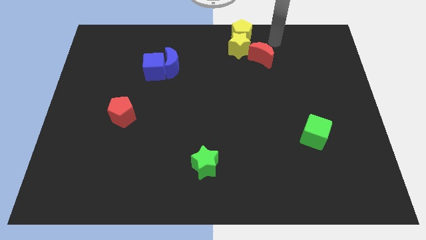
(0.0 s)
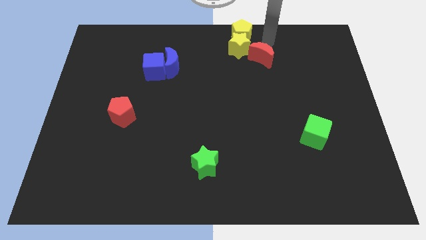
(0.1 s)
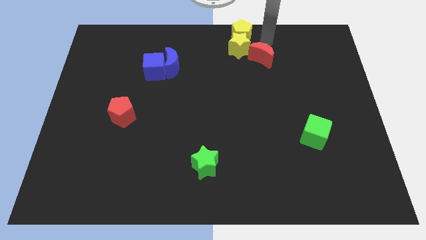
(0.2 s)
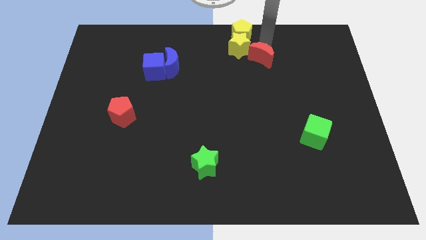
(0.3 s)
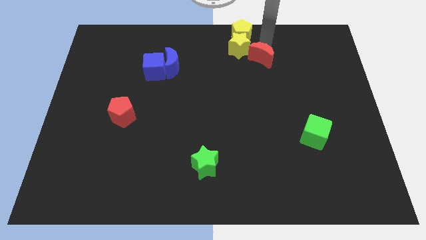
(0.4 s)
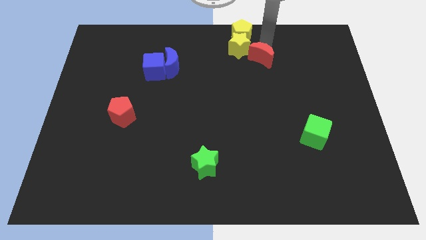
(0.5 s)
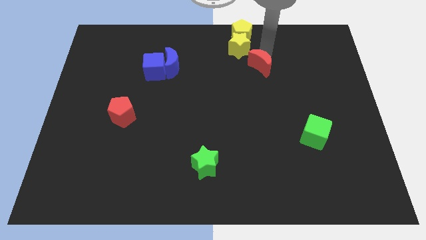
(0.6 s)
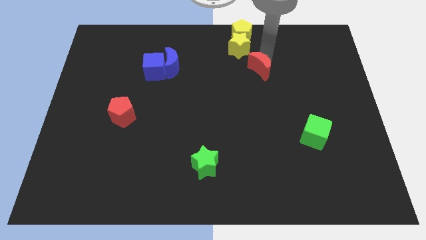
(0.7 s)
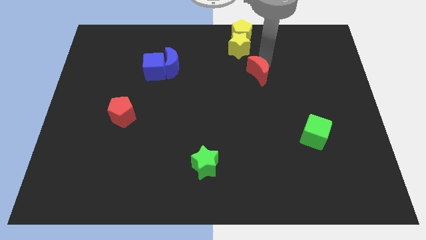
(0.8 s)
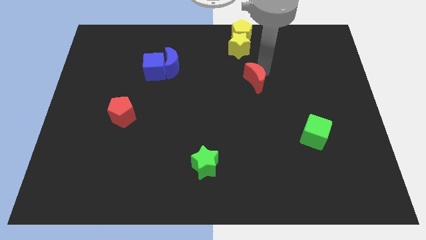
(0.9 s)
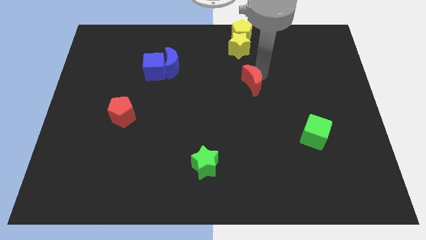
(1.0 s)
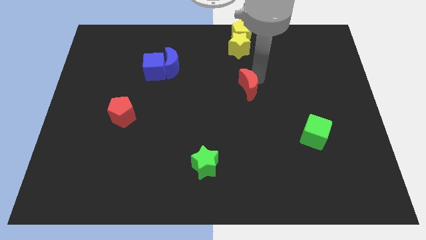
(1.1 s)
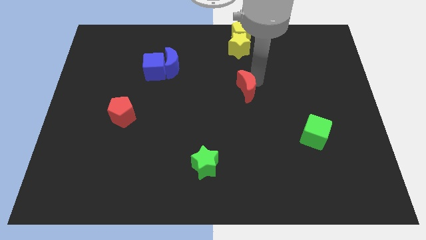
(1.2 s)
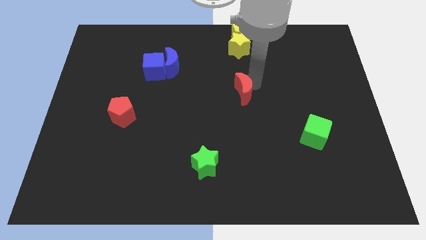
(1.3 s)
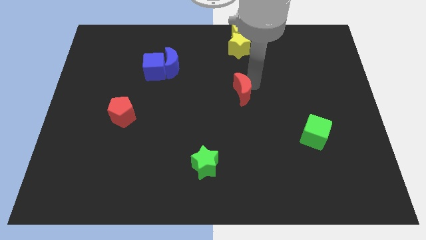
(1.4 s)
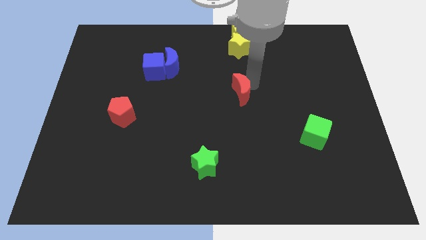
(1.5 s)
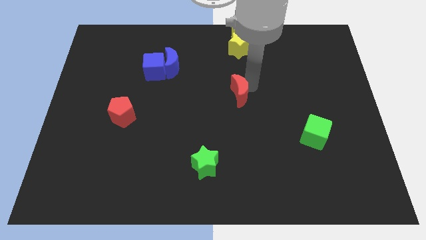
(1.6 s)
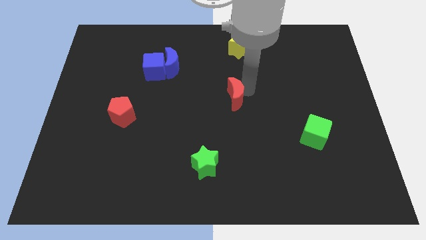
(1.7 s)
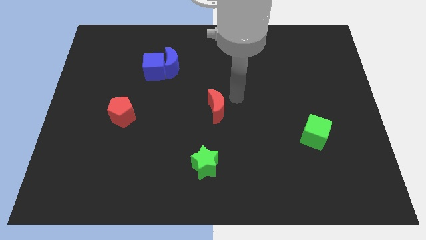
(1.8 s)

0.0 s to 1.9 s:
separate the red moon from the yellow star

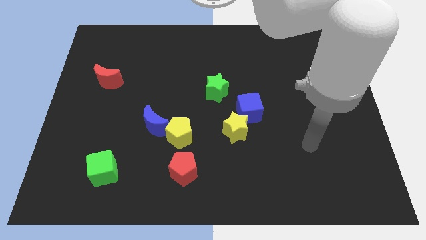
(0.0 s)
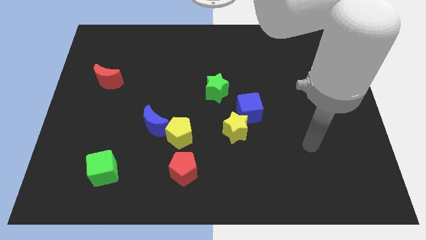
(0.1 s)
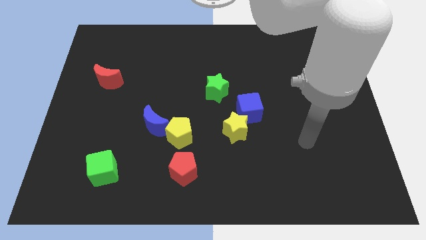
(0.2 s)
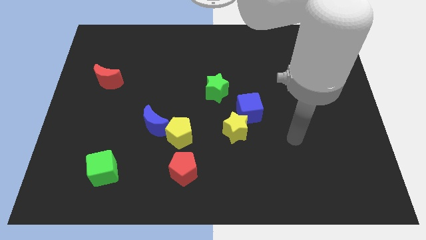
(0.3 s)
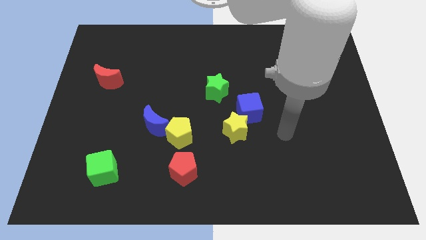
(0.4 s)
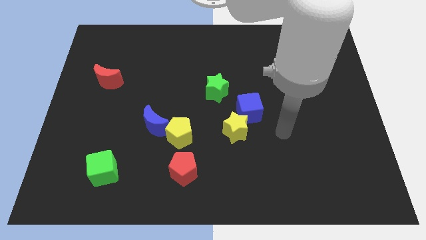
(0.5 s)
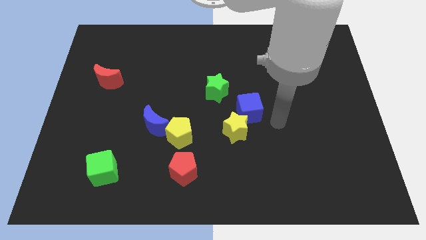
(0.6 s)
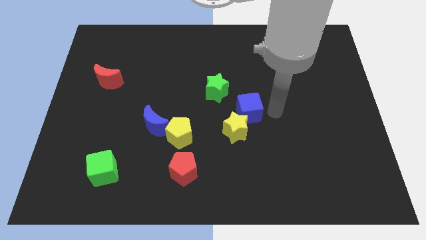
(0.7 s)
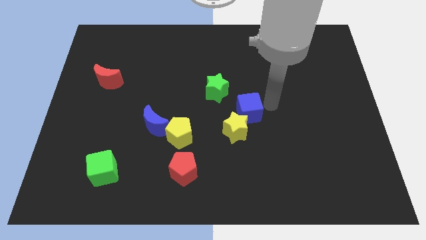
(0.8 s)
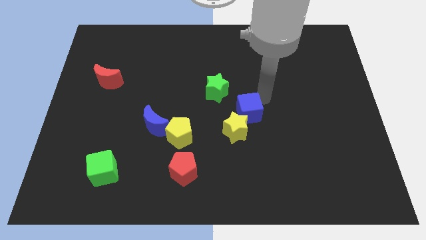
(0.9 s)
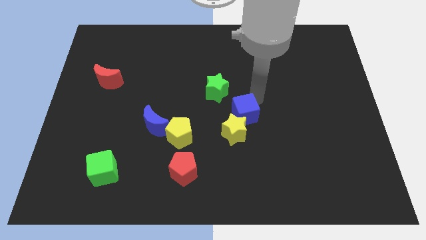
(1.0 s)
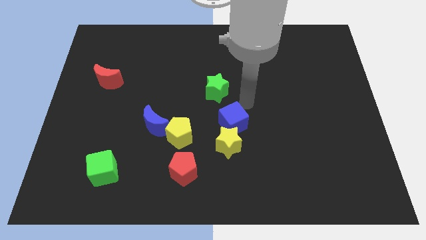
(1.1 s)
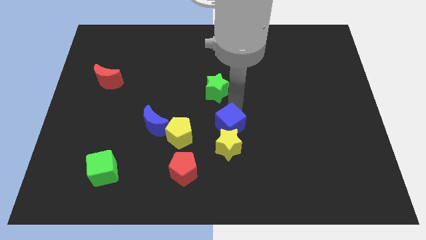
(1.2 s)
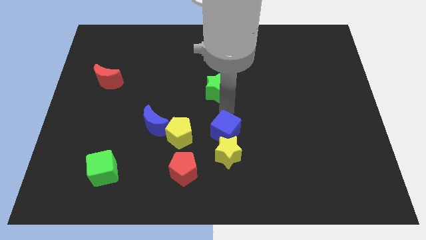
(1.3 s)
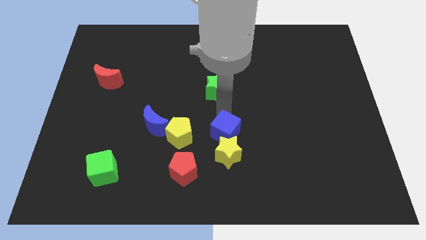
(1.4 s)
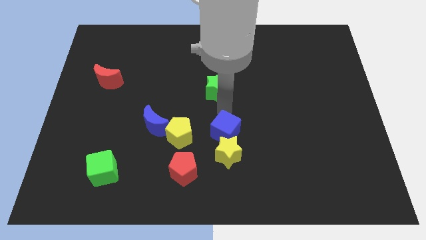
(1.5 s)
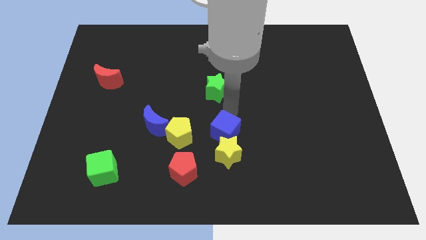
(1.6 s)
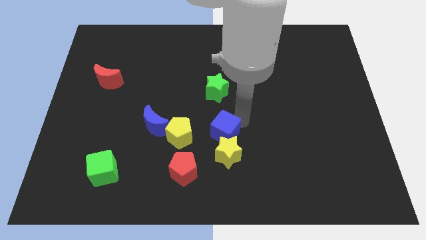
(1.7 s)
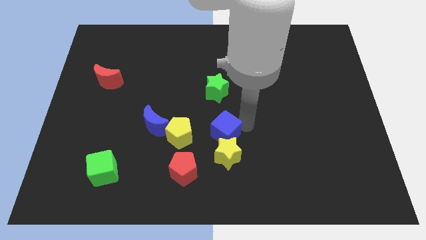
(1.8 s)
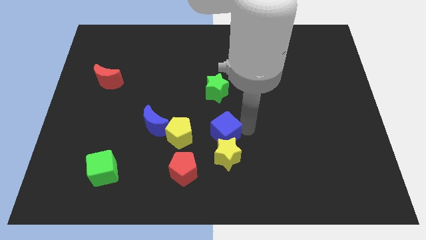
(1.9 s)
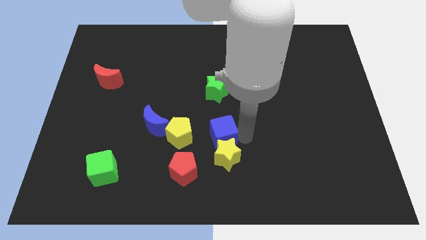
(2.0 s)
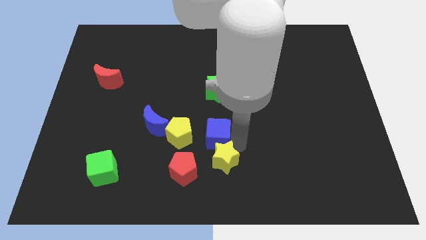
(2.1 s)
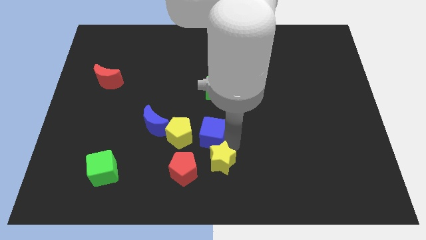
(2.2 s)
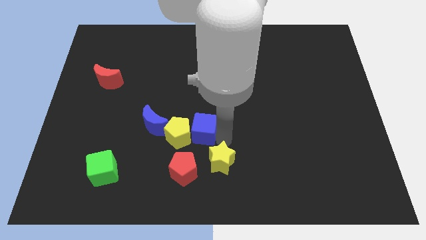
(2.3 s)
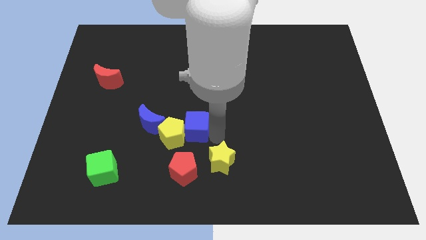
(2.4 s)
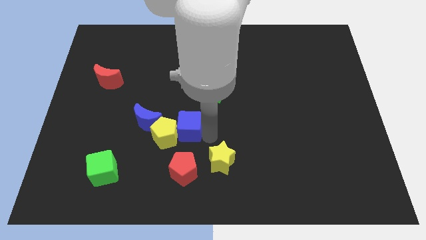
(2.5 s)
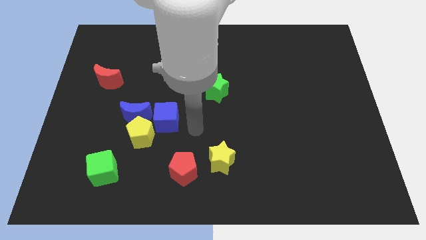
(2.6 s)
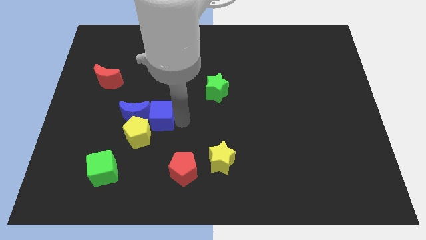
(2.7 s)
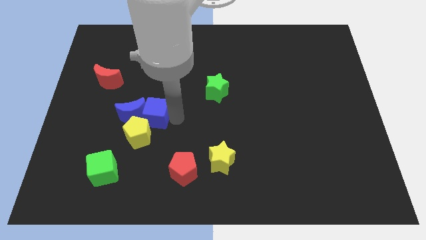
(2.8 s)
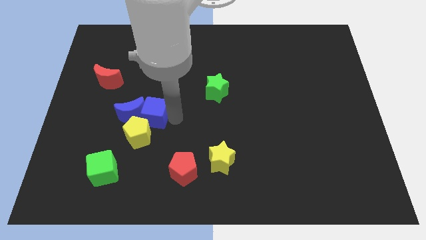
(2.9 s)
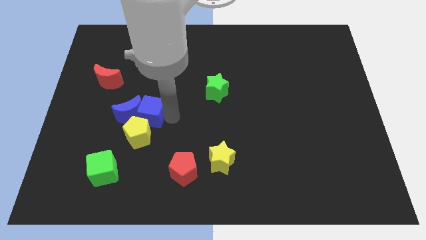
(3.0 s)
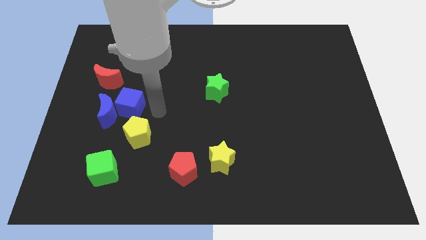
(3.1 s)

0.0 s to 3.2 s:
push the blue blocks to the left side

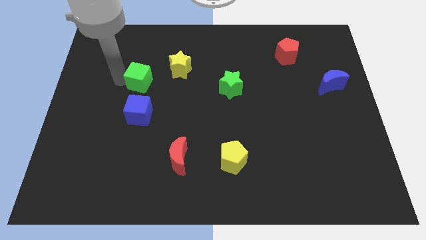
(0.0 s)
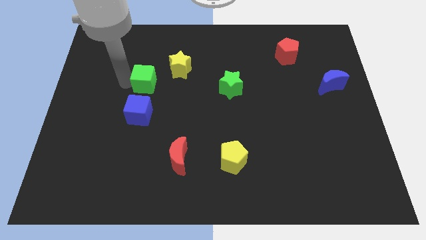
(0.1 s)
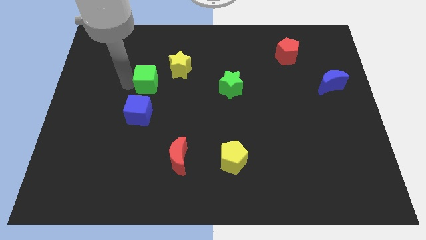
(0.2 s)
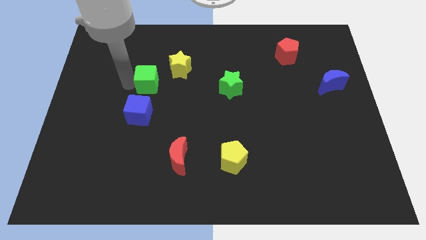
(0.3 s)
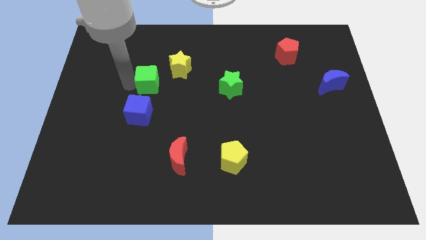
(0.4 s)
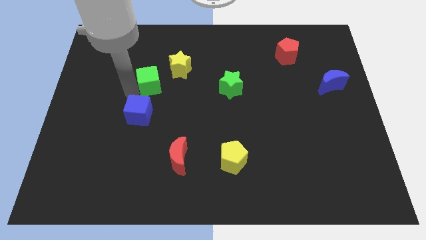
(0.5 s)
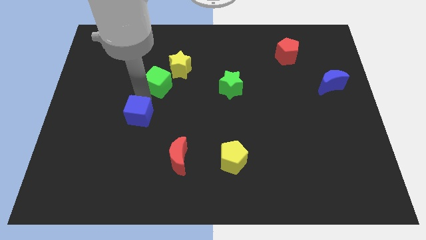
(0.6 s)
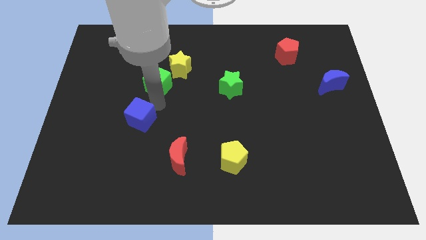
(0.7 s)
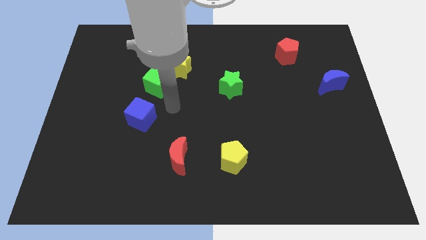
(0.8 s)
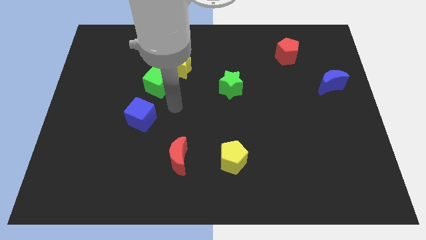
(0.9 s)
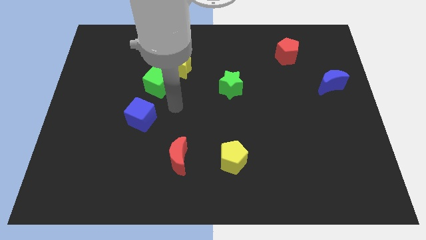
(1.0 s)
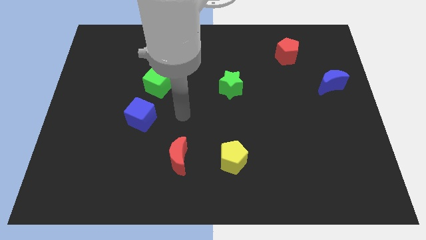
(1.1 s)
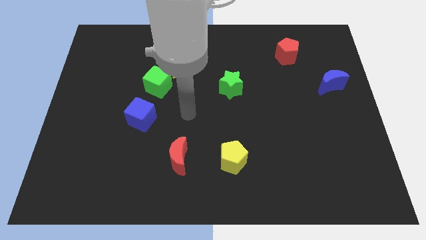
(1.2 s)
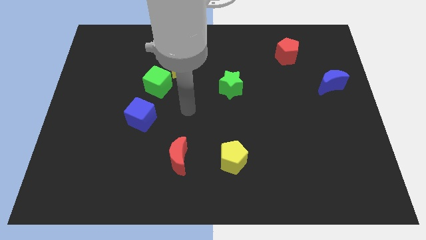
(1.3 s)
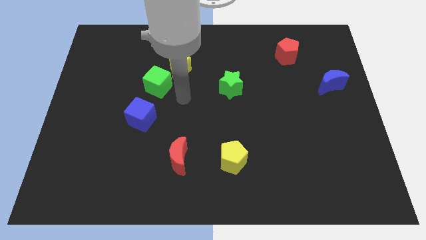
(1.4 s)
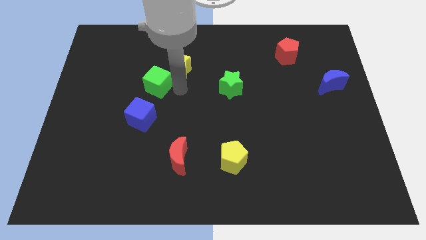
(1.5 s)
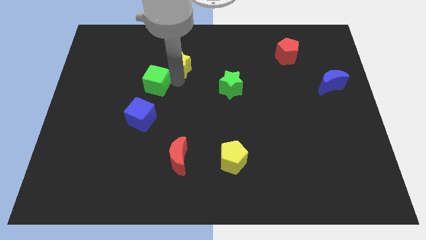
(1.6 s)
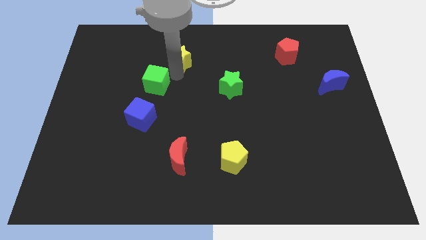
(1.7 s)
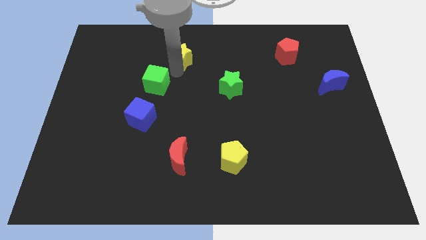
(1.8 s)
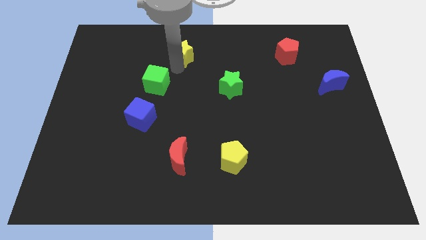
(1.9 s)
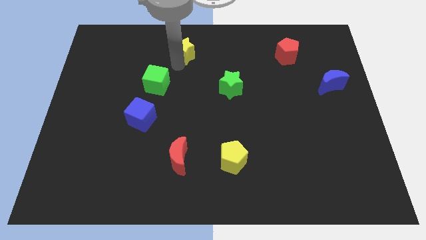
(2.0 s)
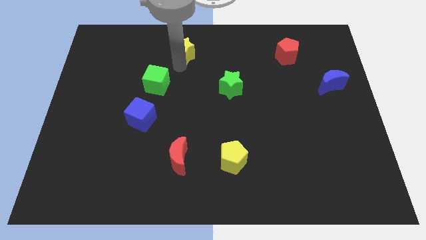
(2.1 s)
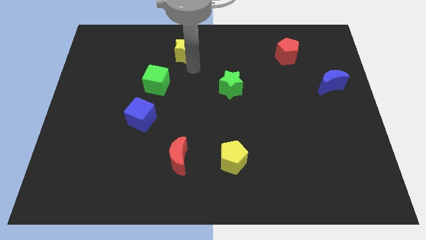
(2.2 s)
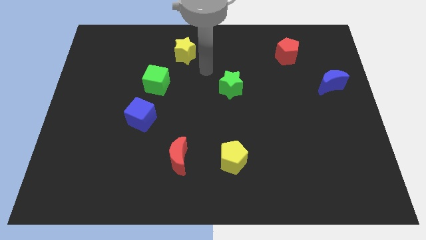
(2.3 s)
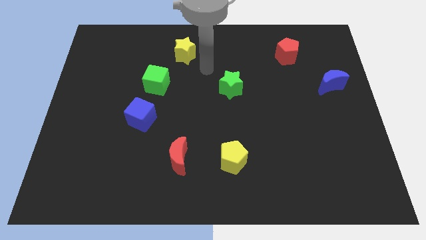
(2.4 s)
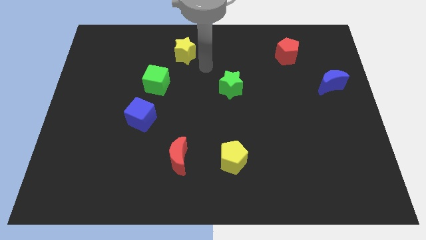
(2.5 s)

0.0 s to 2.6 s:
separate green cube and yellow star

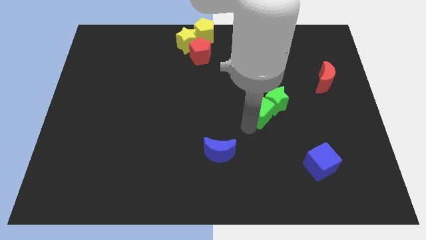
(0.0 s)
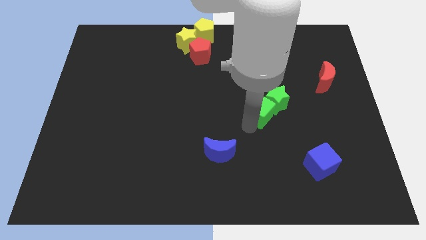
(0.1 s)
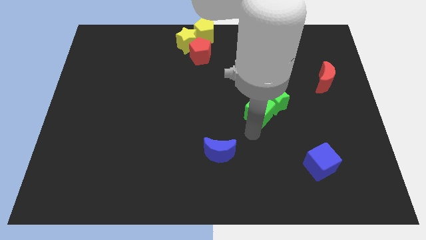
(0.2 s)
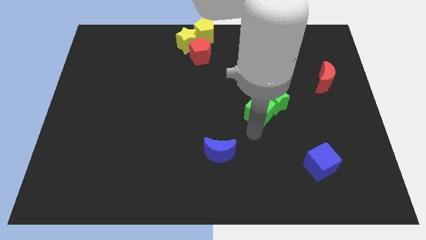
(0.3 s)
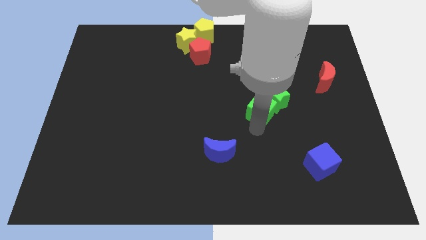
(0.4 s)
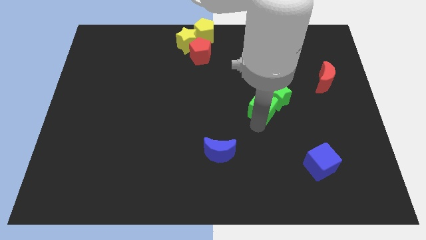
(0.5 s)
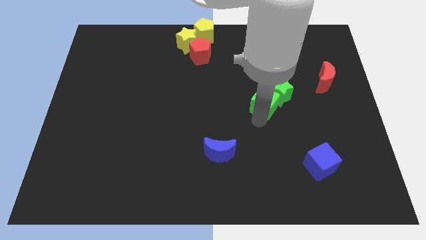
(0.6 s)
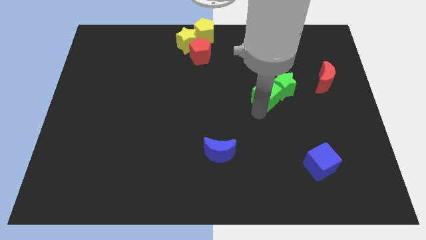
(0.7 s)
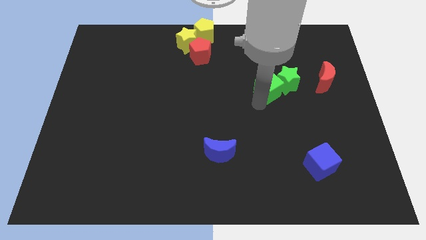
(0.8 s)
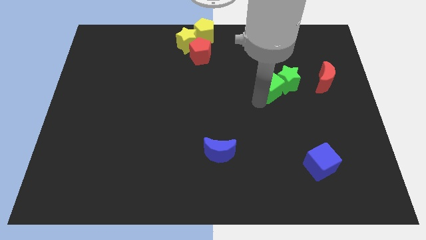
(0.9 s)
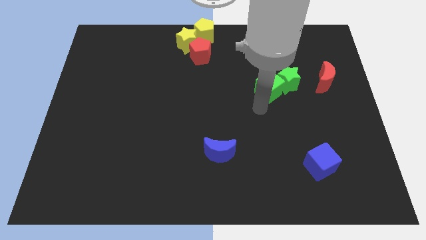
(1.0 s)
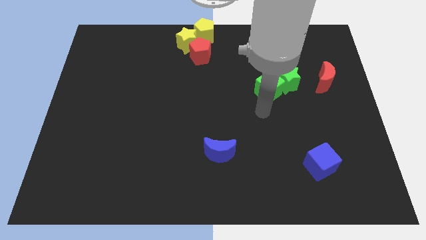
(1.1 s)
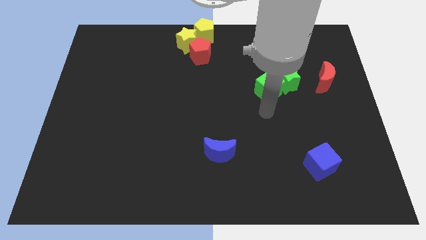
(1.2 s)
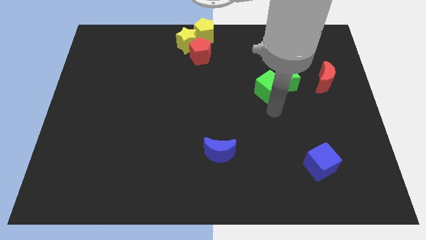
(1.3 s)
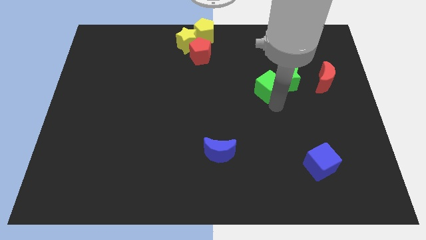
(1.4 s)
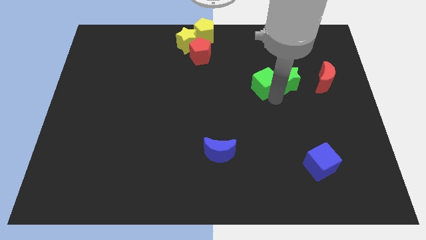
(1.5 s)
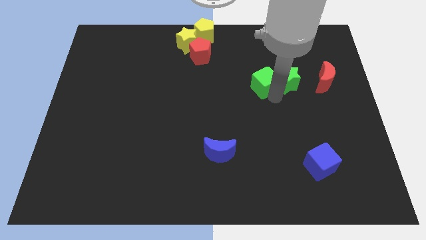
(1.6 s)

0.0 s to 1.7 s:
put the green blocks left to the red moon
